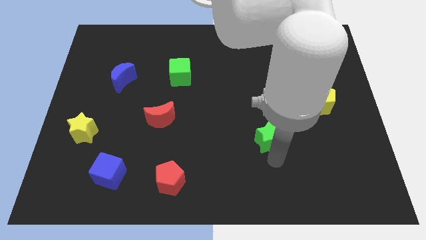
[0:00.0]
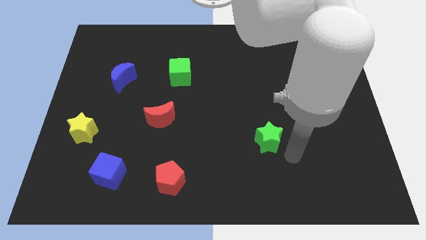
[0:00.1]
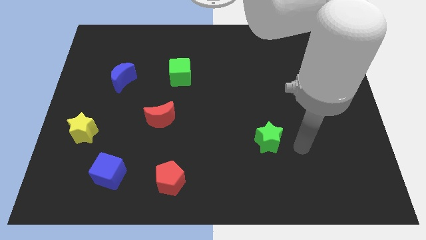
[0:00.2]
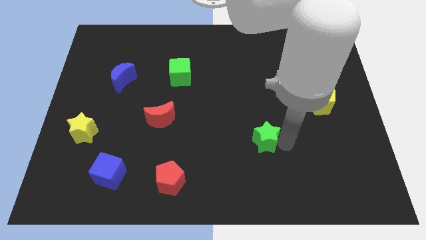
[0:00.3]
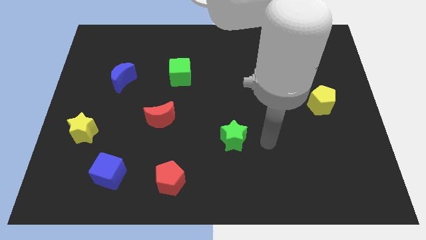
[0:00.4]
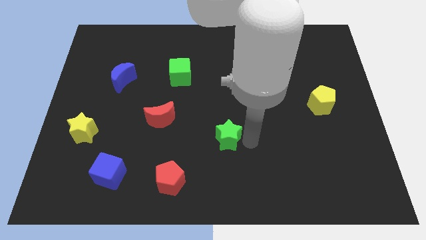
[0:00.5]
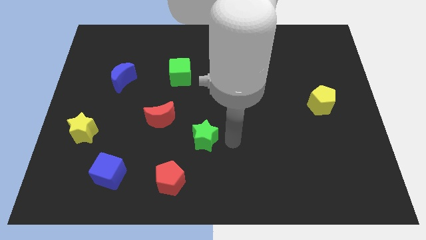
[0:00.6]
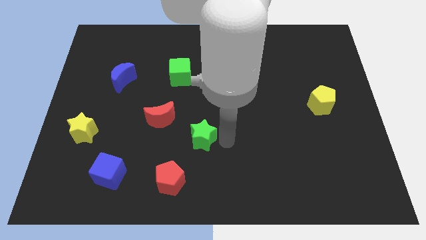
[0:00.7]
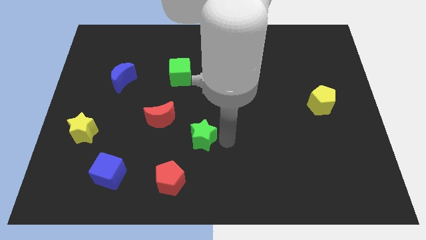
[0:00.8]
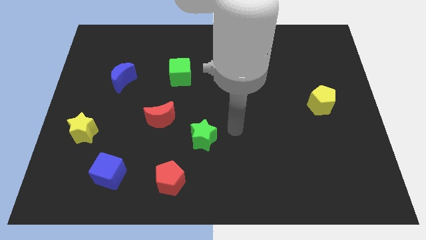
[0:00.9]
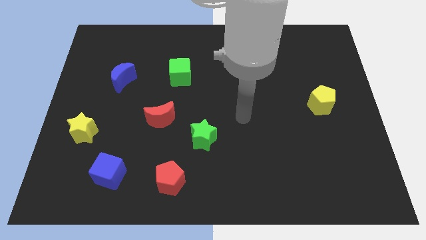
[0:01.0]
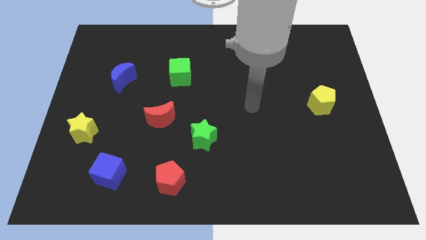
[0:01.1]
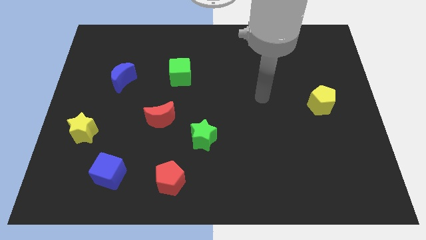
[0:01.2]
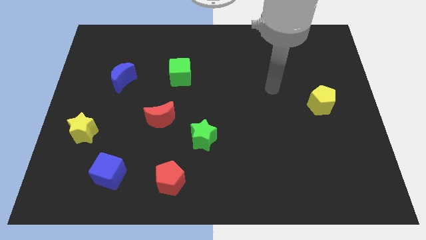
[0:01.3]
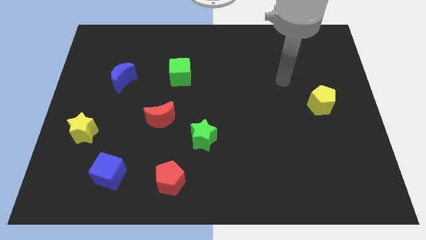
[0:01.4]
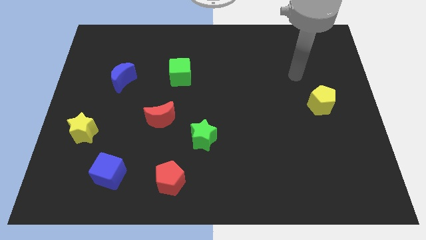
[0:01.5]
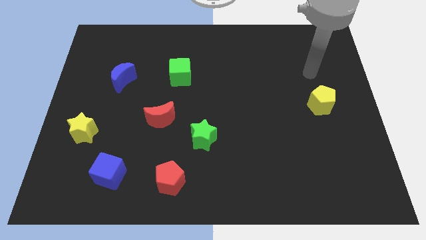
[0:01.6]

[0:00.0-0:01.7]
slide the green star towards the center of the board

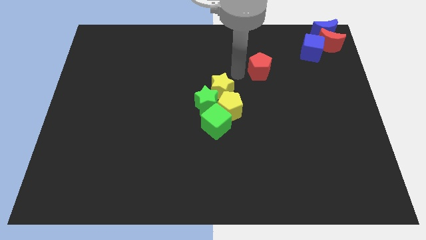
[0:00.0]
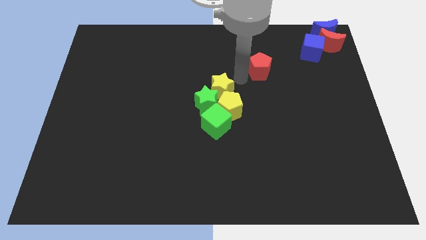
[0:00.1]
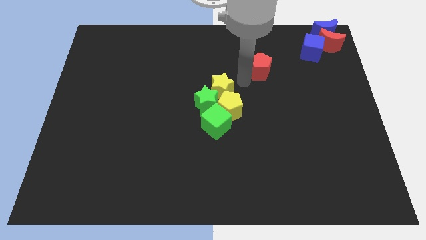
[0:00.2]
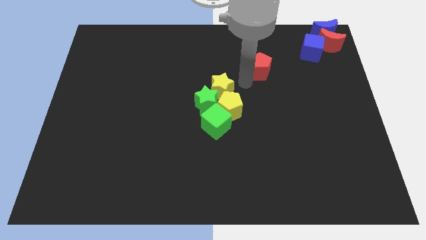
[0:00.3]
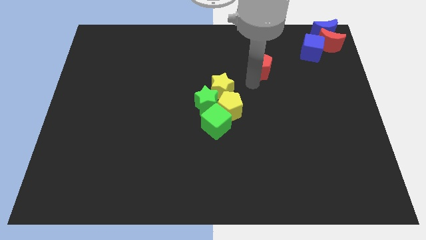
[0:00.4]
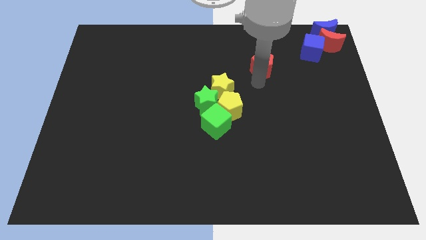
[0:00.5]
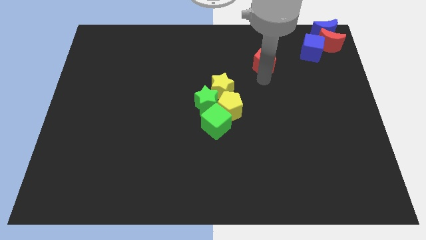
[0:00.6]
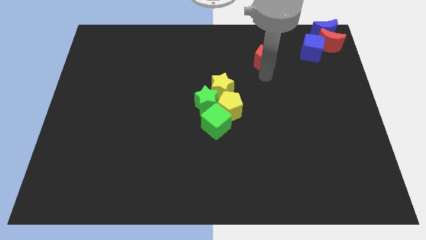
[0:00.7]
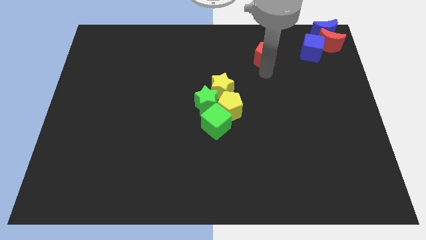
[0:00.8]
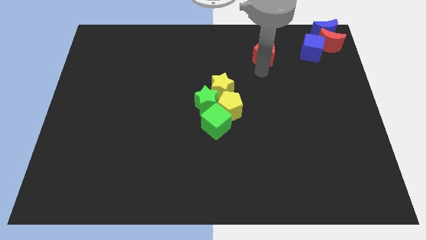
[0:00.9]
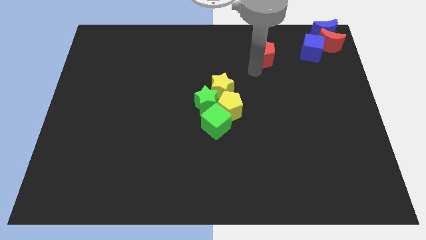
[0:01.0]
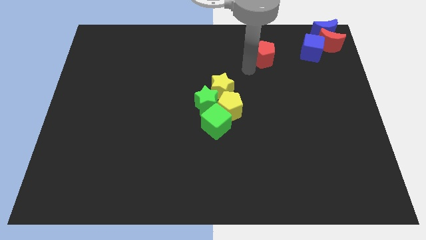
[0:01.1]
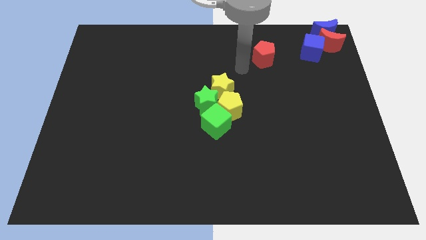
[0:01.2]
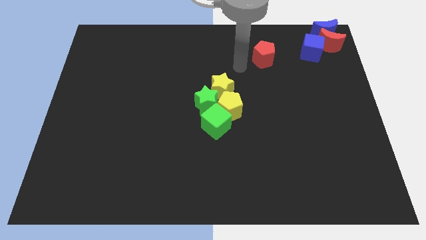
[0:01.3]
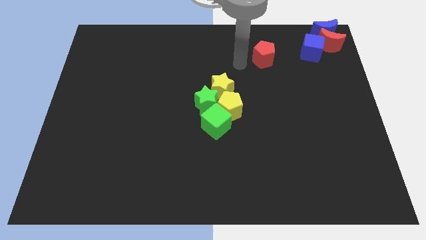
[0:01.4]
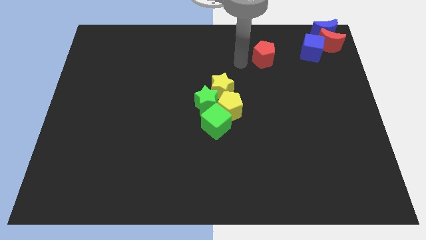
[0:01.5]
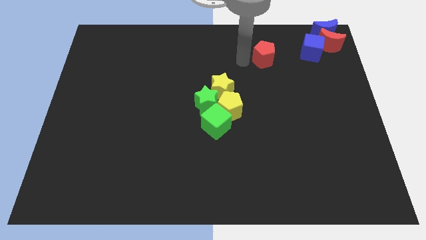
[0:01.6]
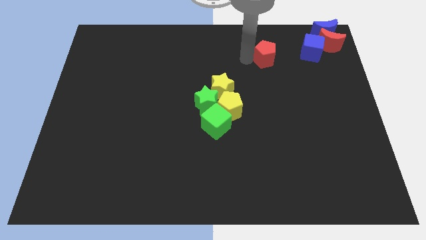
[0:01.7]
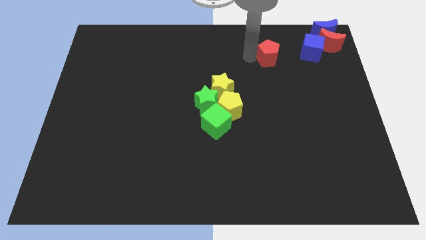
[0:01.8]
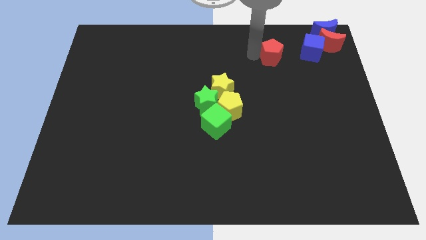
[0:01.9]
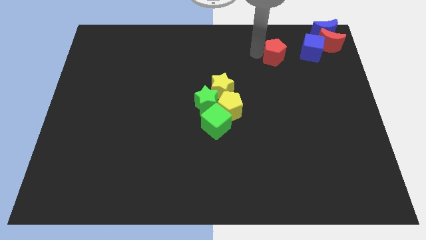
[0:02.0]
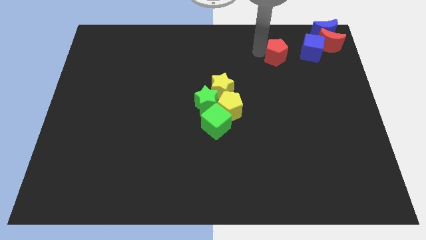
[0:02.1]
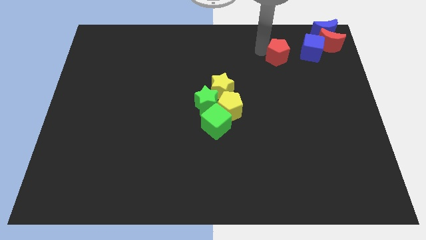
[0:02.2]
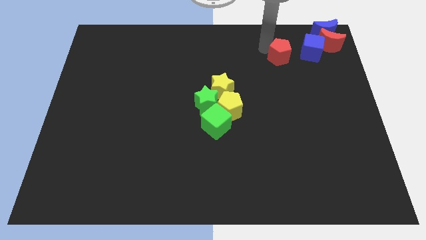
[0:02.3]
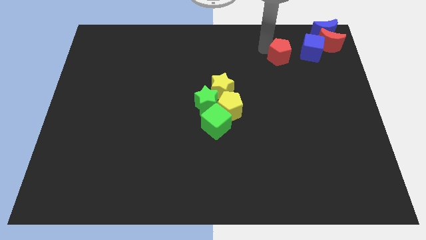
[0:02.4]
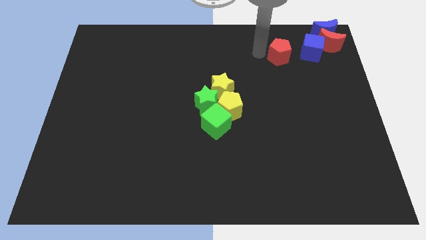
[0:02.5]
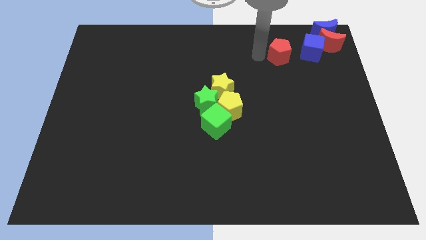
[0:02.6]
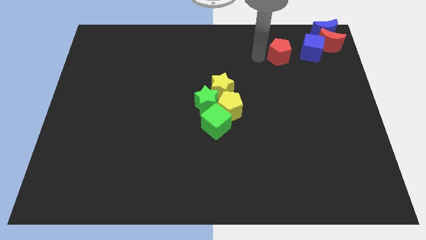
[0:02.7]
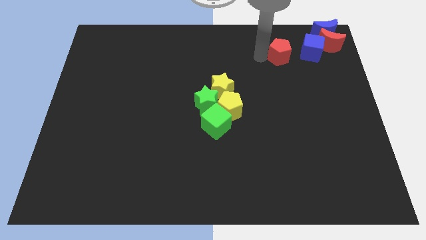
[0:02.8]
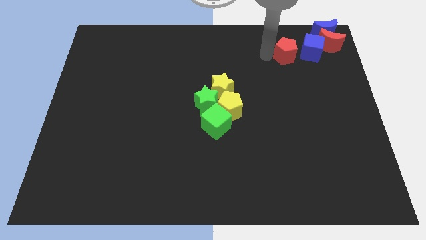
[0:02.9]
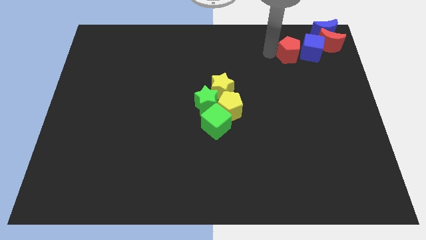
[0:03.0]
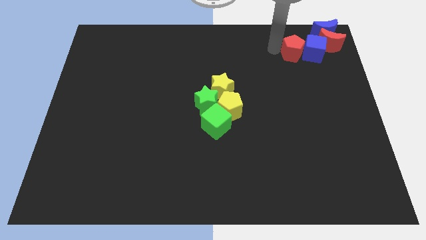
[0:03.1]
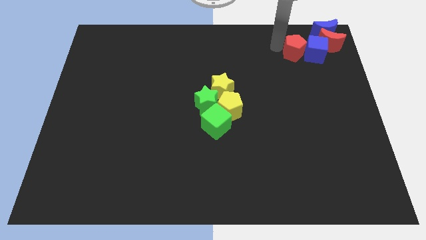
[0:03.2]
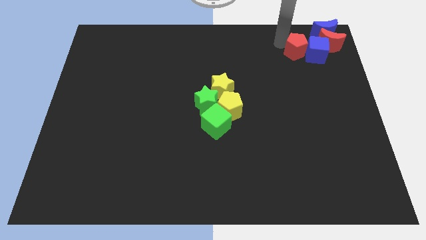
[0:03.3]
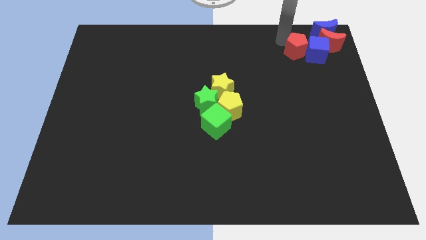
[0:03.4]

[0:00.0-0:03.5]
adjust the red pentagon into the left side of the blue cube

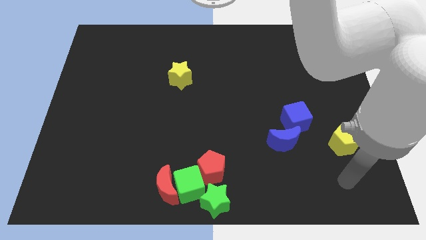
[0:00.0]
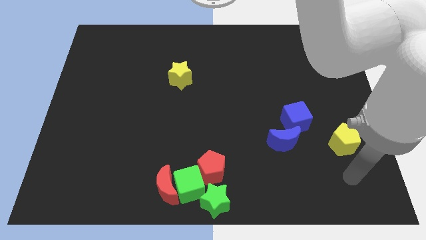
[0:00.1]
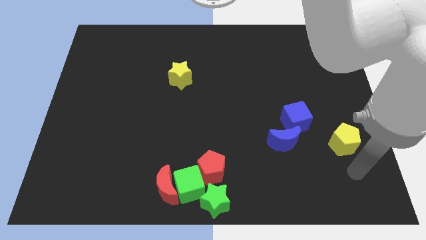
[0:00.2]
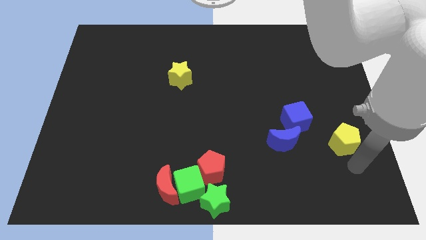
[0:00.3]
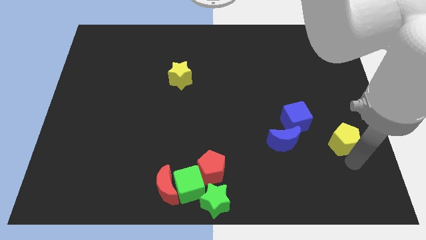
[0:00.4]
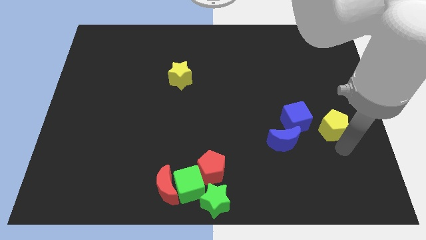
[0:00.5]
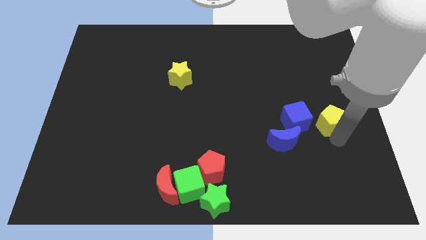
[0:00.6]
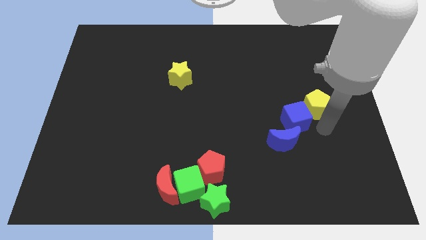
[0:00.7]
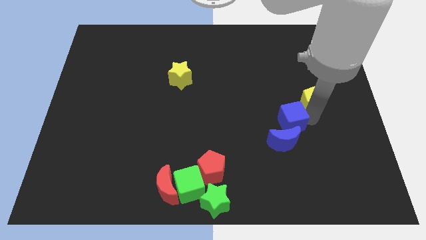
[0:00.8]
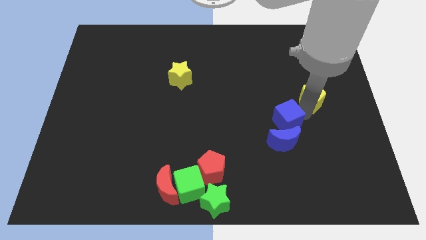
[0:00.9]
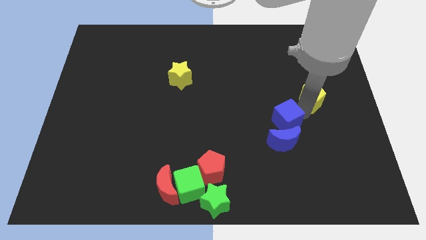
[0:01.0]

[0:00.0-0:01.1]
push the yellow pentagon to the top right of the blue cube

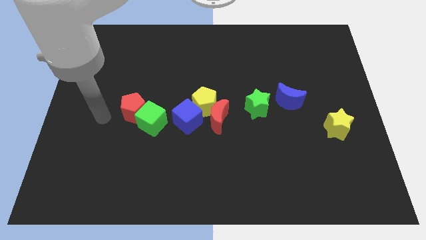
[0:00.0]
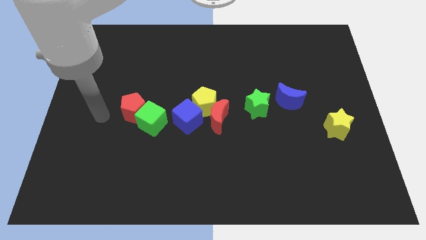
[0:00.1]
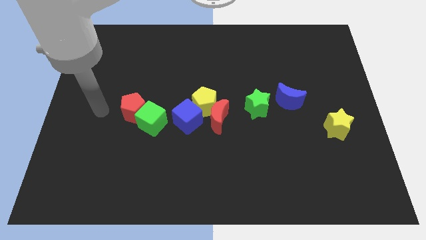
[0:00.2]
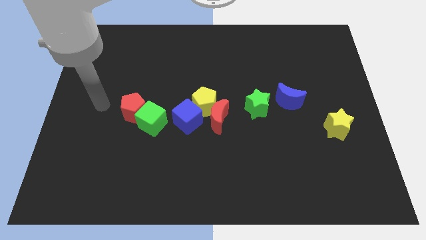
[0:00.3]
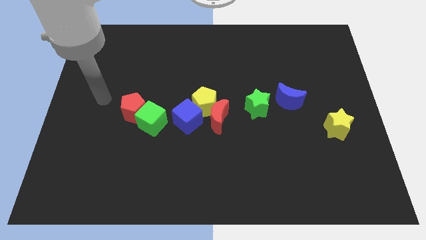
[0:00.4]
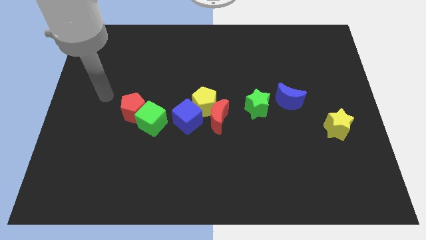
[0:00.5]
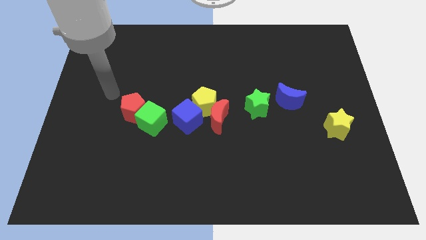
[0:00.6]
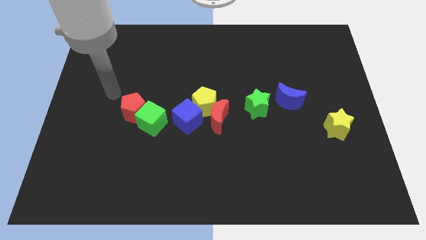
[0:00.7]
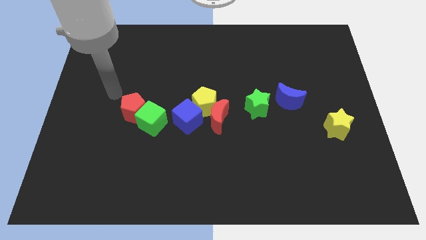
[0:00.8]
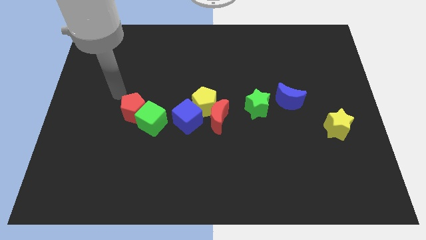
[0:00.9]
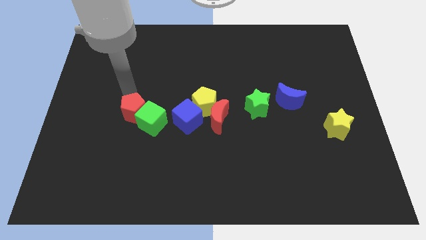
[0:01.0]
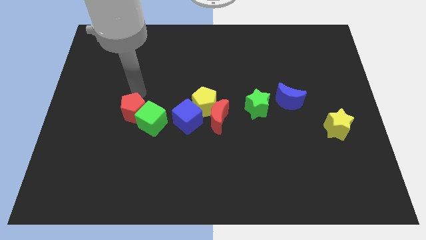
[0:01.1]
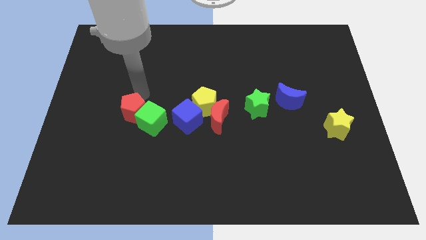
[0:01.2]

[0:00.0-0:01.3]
place the arm above the red pentagon

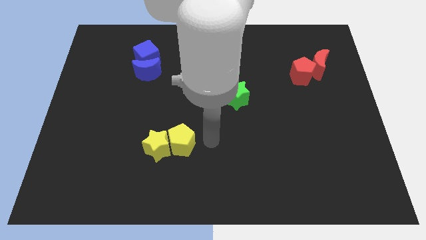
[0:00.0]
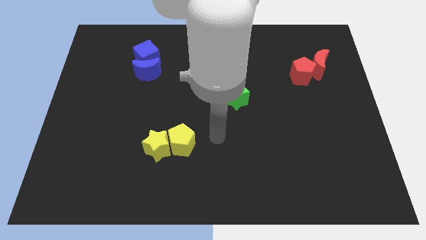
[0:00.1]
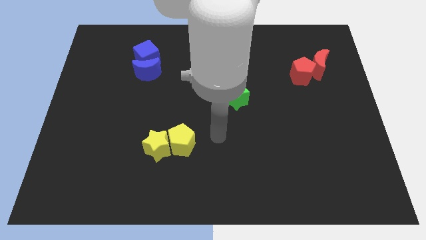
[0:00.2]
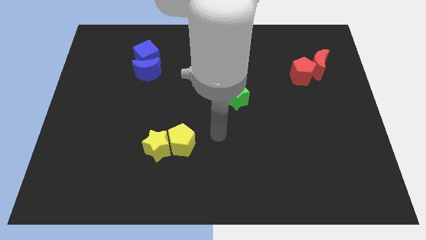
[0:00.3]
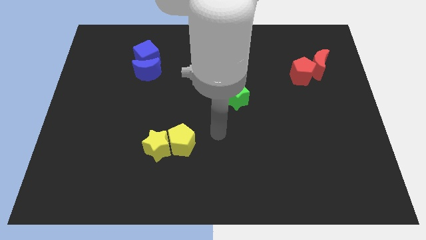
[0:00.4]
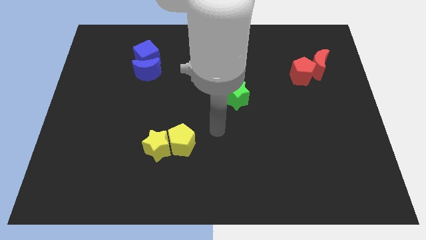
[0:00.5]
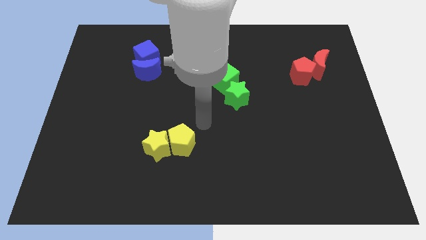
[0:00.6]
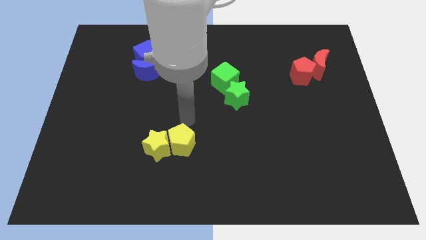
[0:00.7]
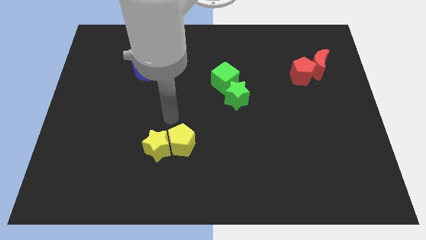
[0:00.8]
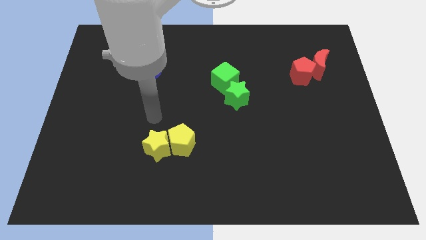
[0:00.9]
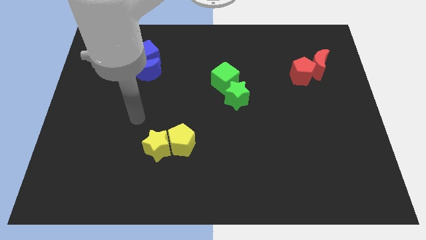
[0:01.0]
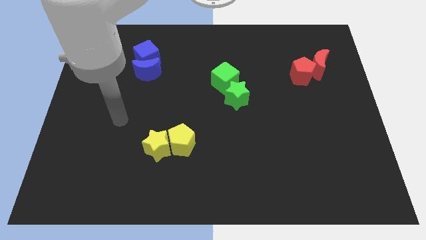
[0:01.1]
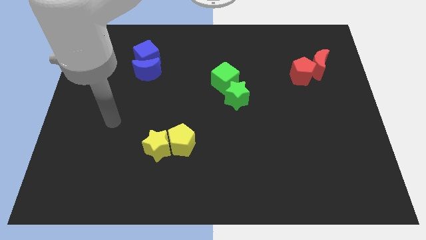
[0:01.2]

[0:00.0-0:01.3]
move the arm to the left side of the board
